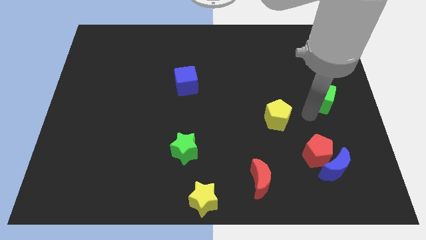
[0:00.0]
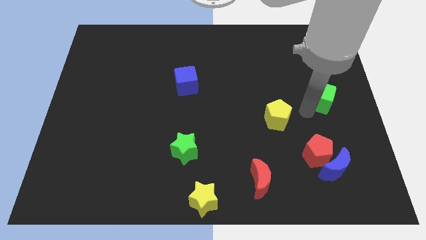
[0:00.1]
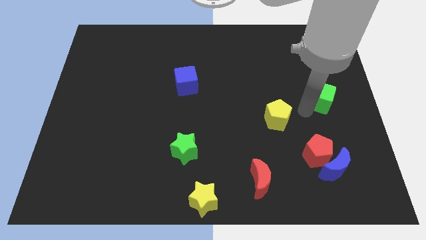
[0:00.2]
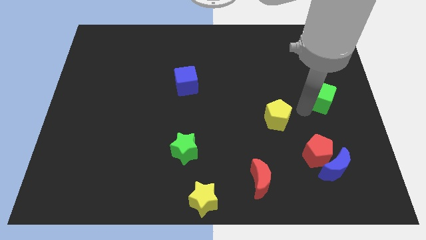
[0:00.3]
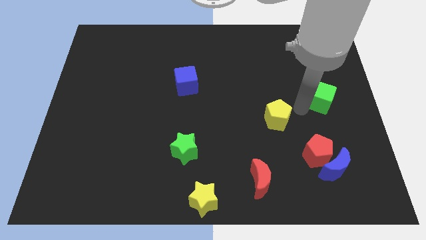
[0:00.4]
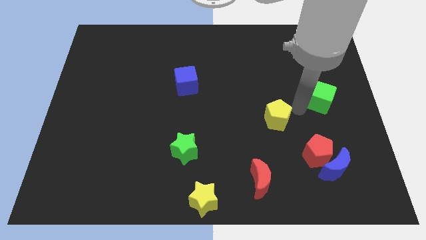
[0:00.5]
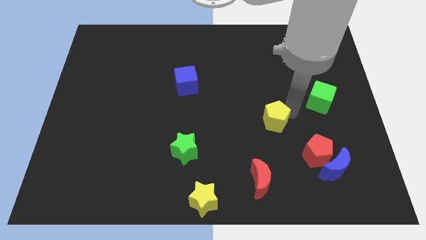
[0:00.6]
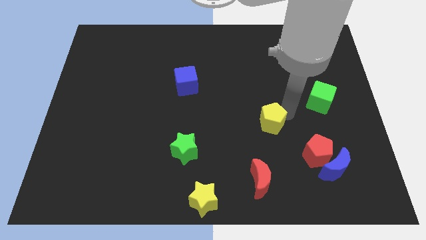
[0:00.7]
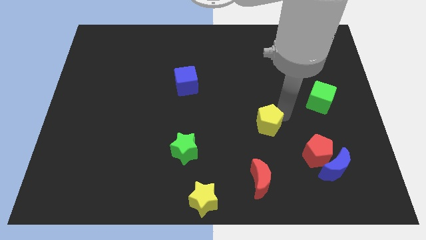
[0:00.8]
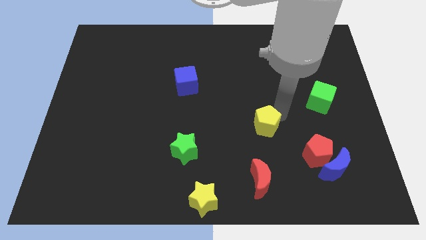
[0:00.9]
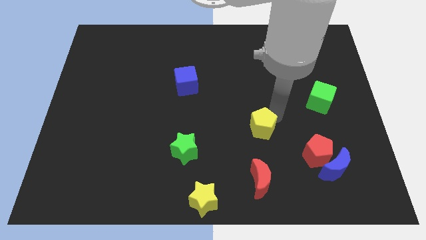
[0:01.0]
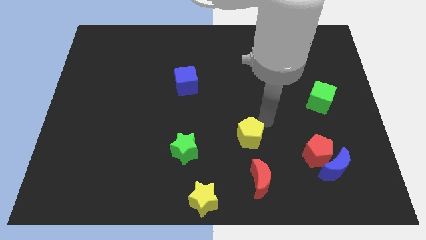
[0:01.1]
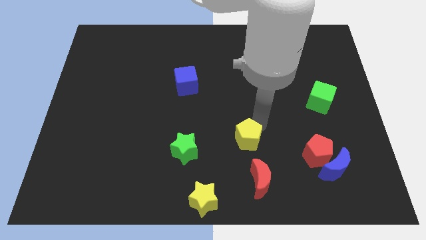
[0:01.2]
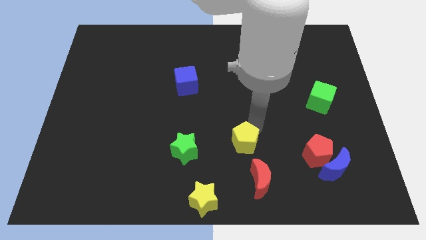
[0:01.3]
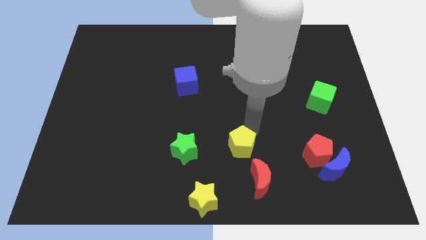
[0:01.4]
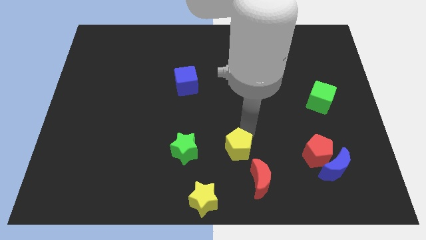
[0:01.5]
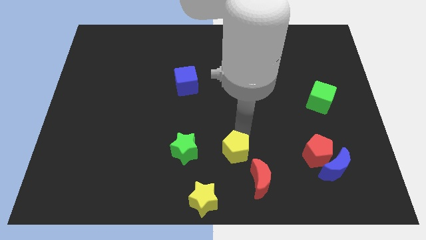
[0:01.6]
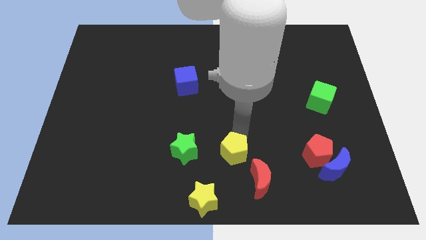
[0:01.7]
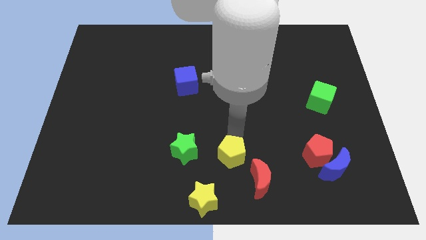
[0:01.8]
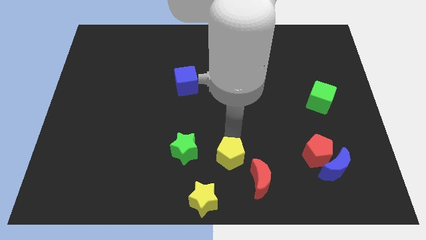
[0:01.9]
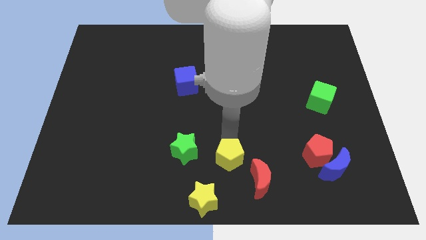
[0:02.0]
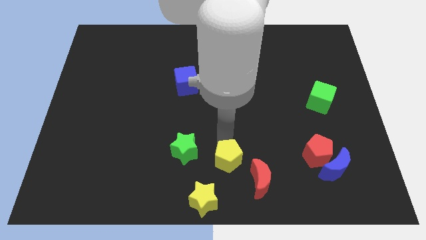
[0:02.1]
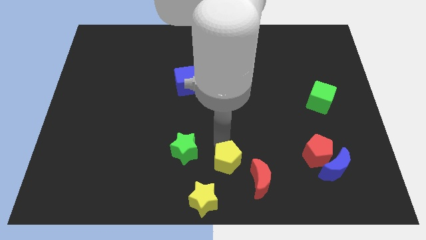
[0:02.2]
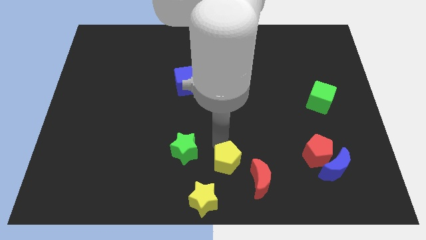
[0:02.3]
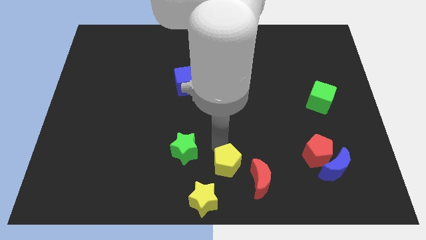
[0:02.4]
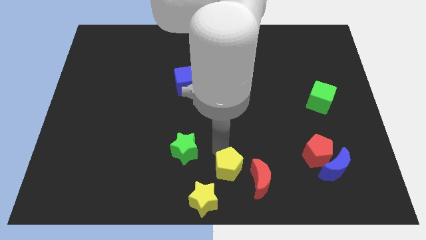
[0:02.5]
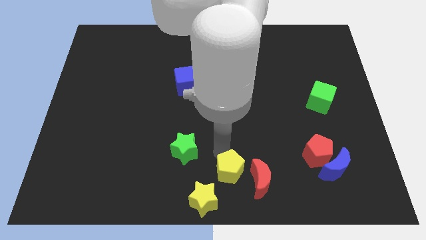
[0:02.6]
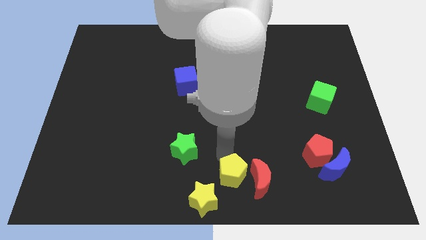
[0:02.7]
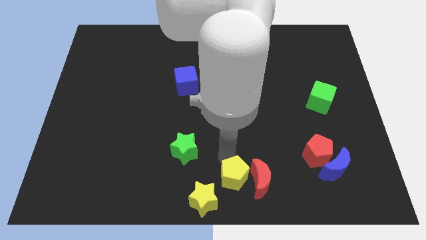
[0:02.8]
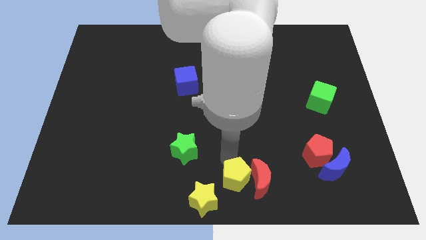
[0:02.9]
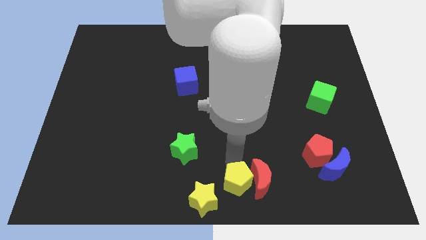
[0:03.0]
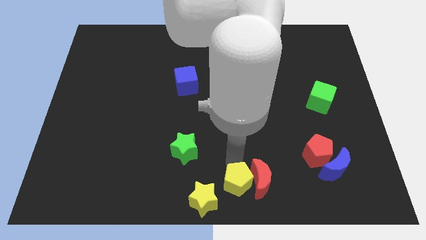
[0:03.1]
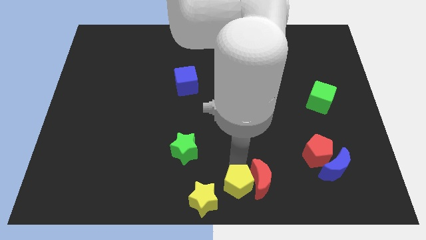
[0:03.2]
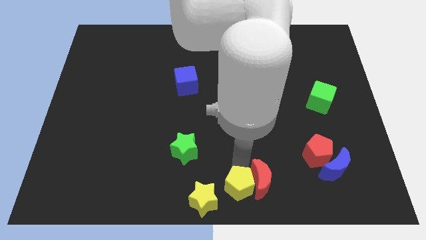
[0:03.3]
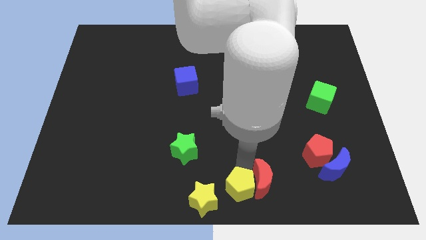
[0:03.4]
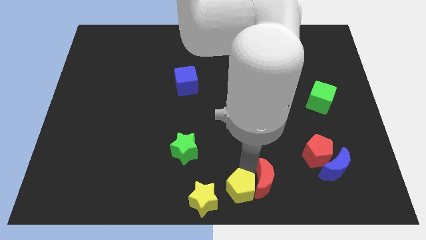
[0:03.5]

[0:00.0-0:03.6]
put the yellow pentagon into the red moon

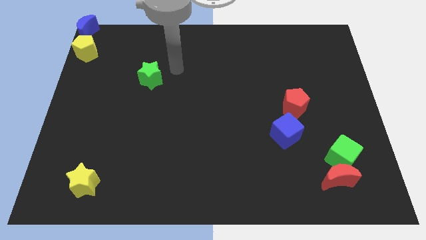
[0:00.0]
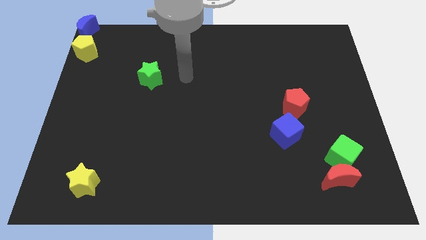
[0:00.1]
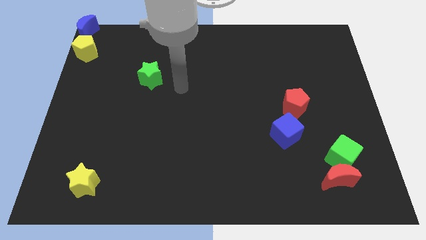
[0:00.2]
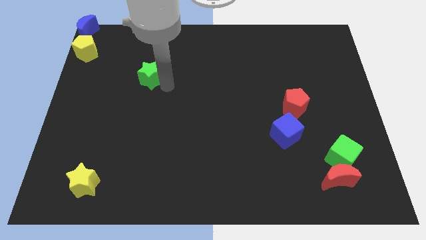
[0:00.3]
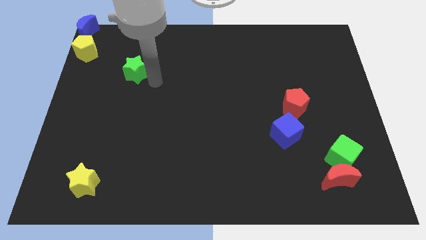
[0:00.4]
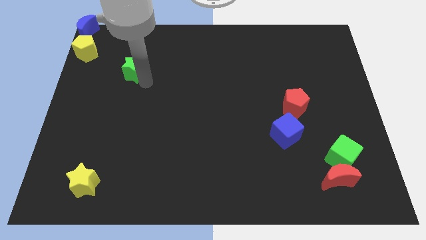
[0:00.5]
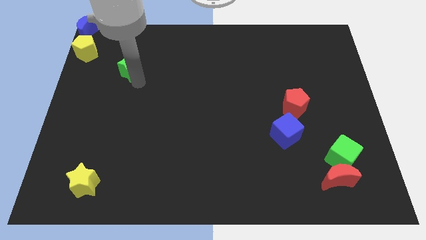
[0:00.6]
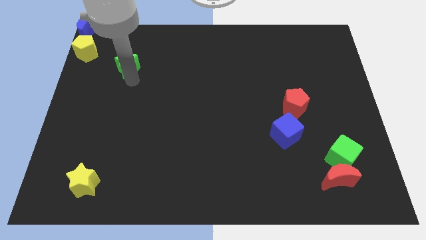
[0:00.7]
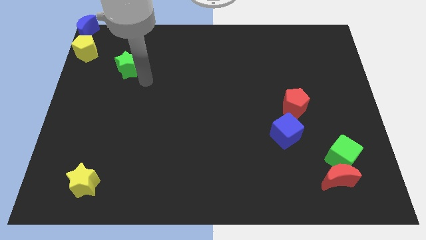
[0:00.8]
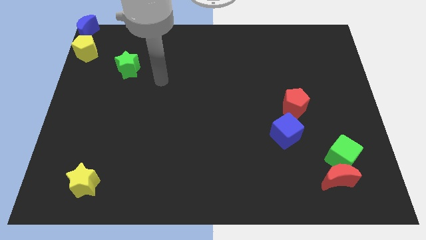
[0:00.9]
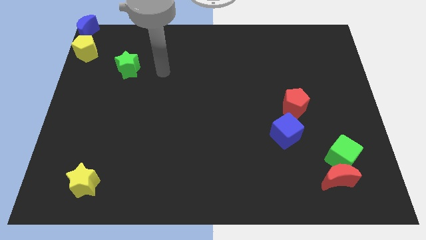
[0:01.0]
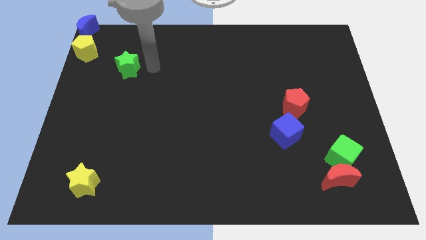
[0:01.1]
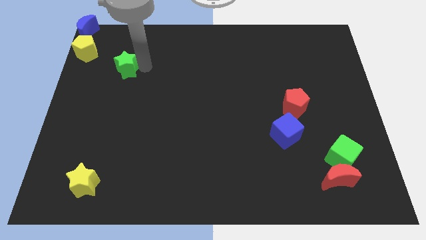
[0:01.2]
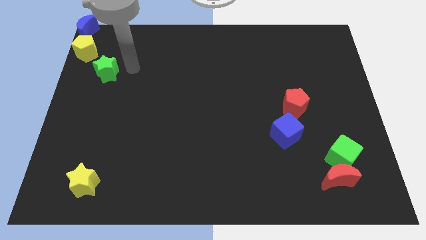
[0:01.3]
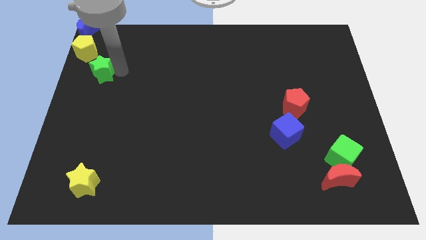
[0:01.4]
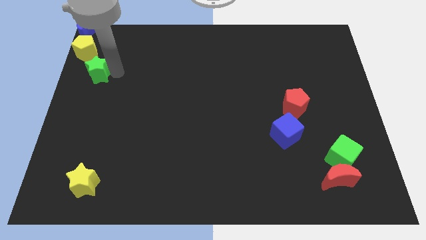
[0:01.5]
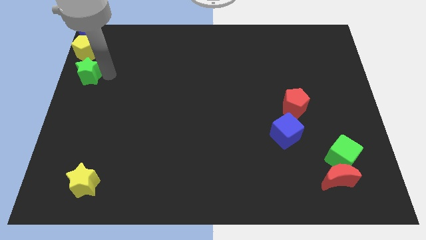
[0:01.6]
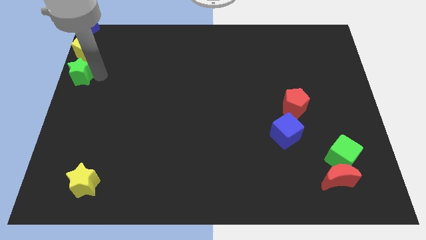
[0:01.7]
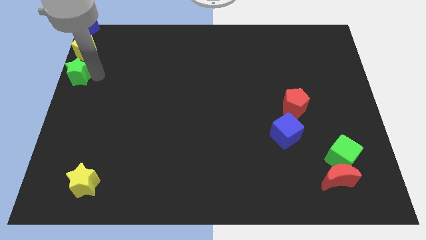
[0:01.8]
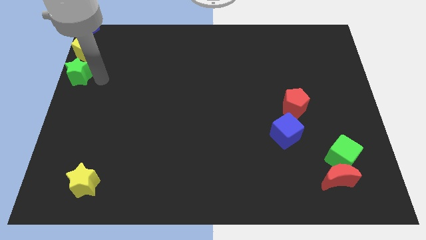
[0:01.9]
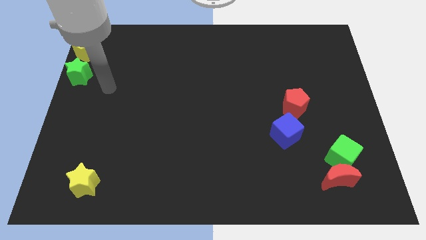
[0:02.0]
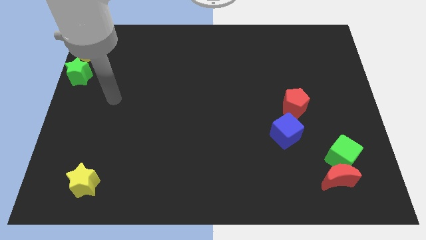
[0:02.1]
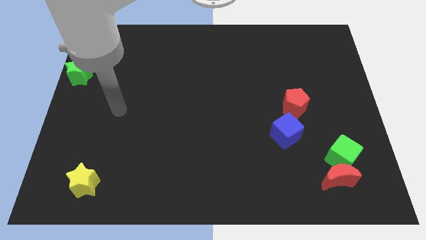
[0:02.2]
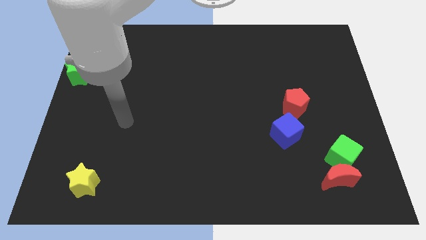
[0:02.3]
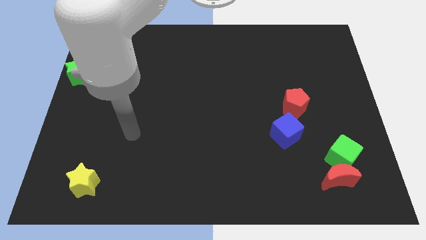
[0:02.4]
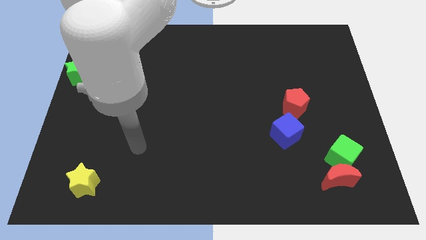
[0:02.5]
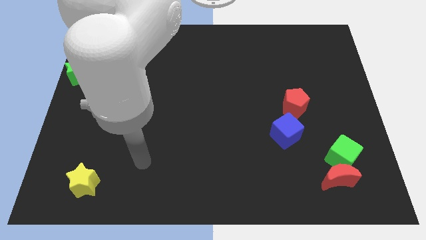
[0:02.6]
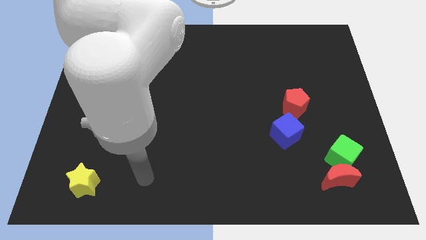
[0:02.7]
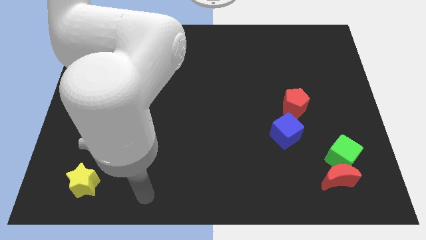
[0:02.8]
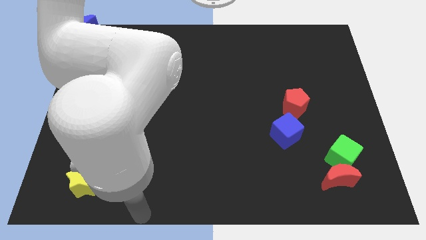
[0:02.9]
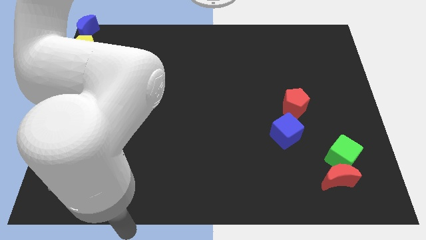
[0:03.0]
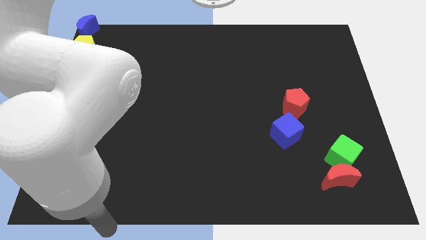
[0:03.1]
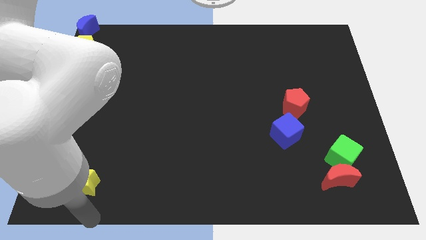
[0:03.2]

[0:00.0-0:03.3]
move the green star to the bottom of the yellow pentagon

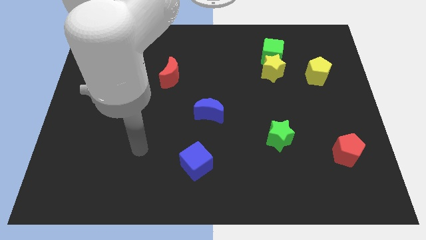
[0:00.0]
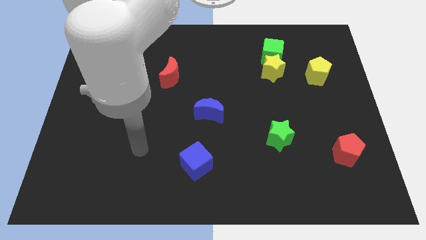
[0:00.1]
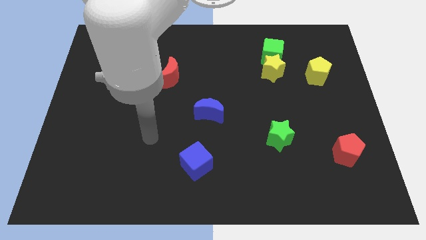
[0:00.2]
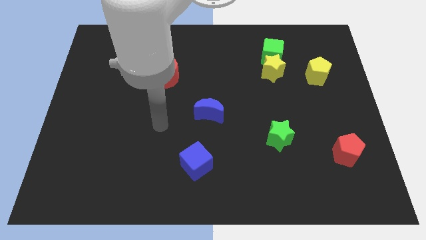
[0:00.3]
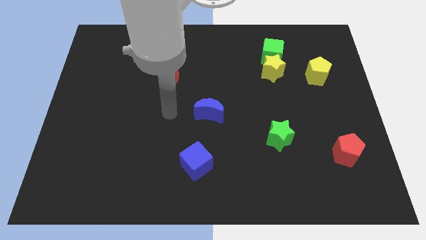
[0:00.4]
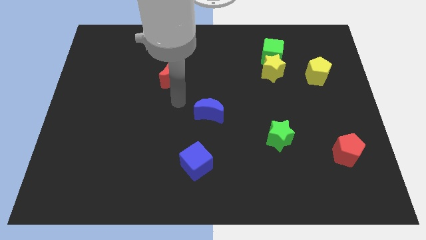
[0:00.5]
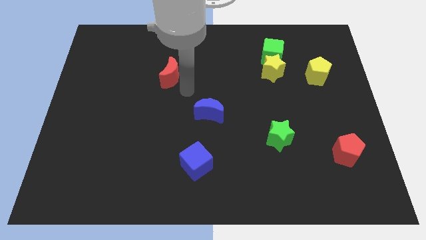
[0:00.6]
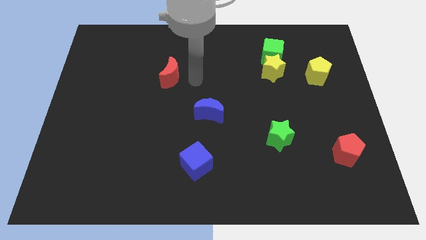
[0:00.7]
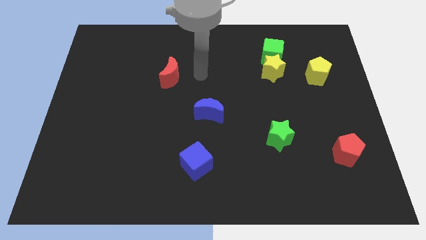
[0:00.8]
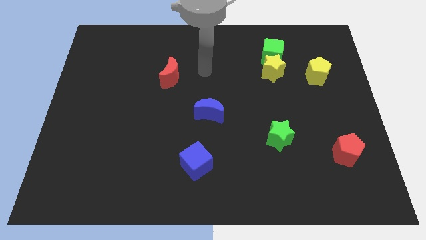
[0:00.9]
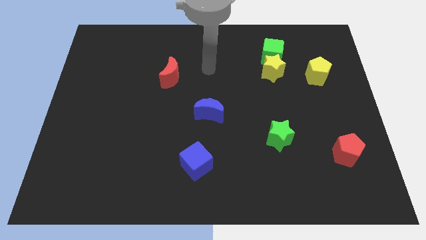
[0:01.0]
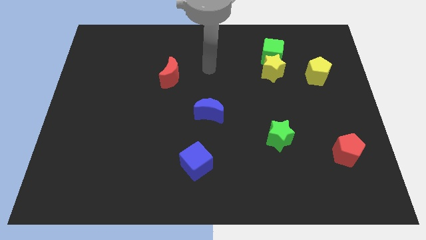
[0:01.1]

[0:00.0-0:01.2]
move your arm to the horizontal top of blue moon

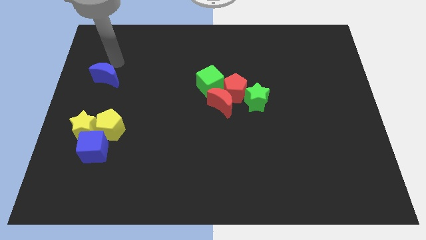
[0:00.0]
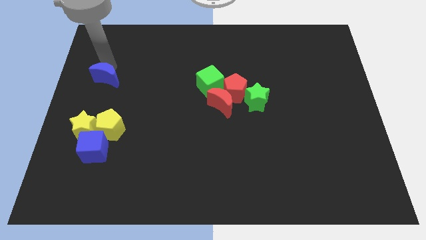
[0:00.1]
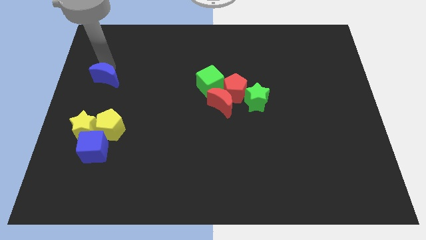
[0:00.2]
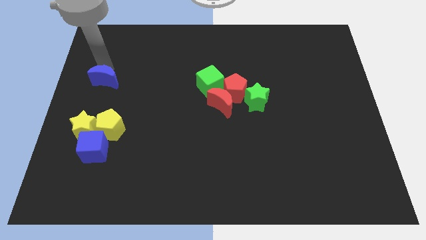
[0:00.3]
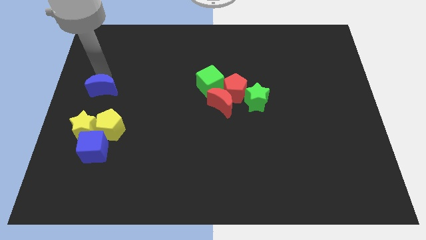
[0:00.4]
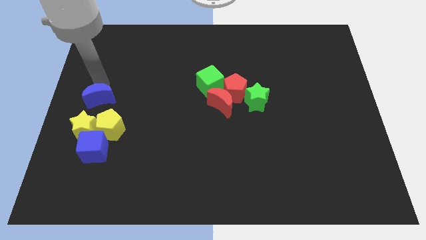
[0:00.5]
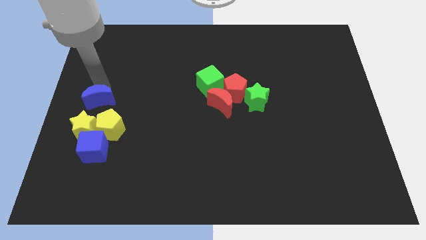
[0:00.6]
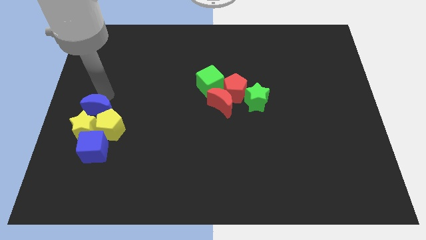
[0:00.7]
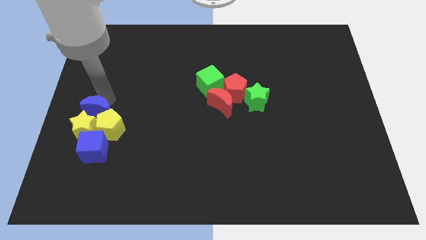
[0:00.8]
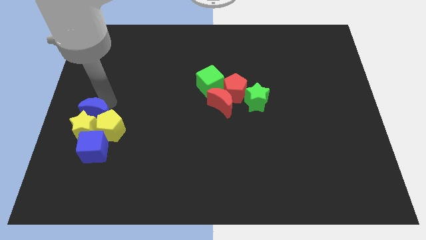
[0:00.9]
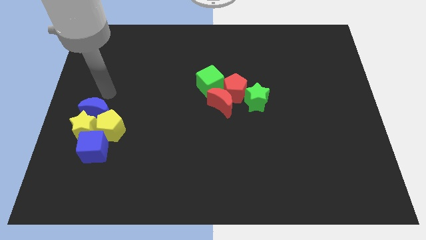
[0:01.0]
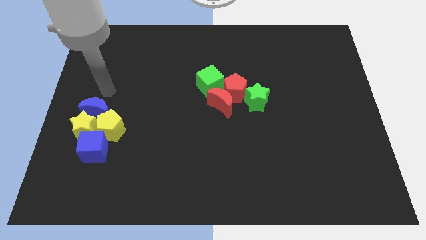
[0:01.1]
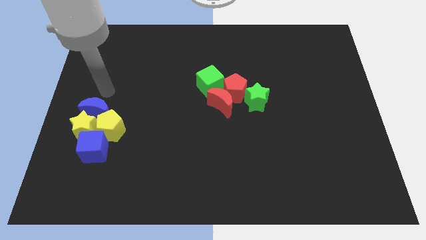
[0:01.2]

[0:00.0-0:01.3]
push the blue crescent into the yellow star
